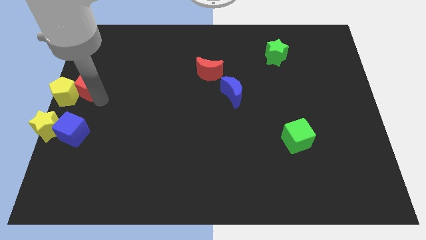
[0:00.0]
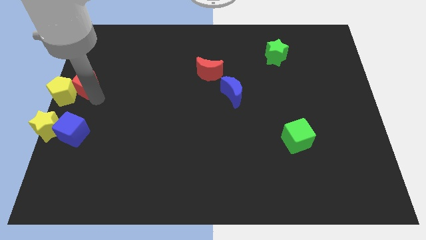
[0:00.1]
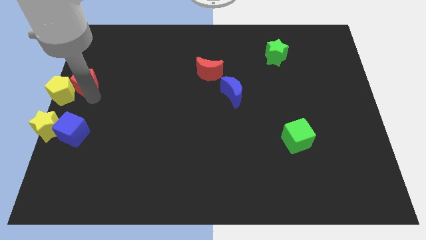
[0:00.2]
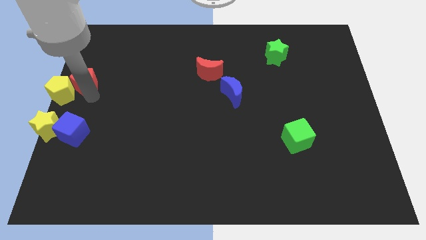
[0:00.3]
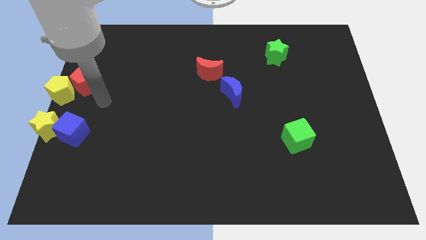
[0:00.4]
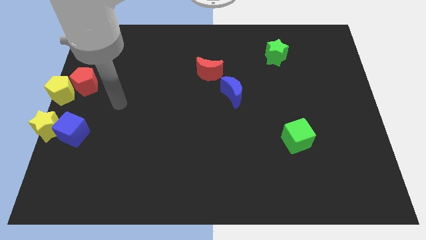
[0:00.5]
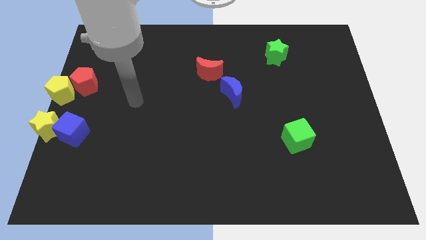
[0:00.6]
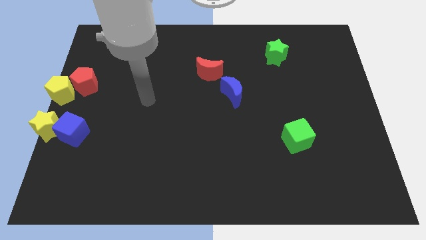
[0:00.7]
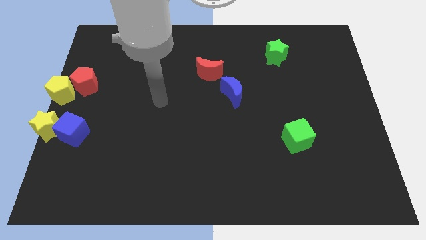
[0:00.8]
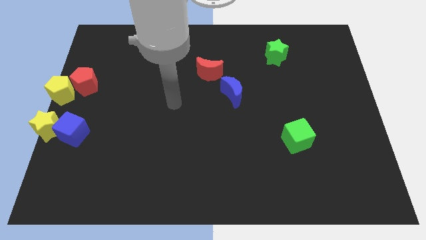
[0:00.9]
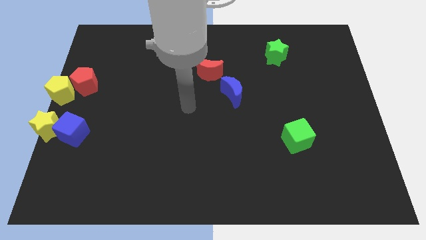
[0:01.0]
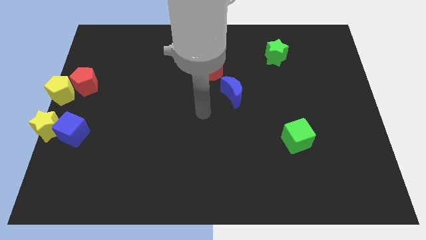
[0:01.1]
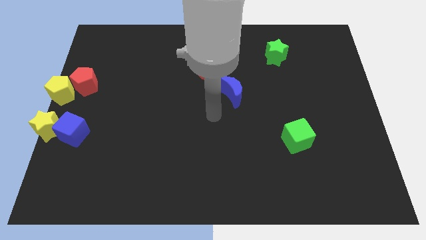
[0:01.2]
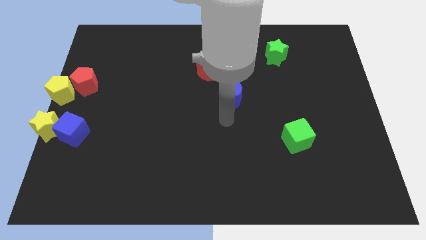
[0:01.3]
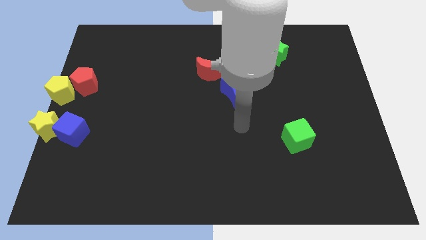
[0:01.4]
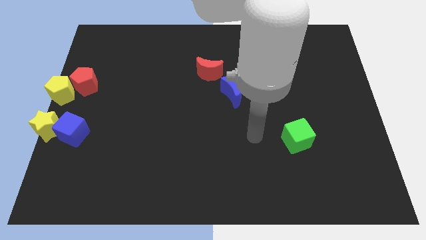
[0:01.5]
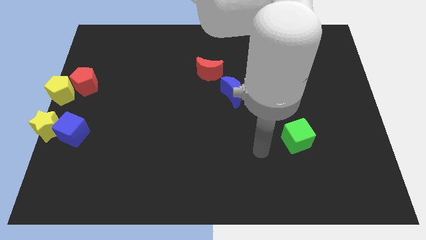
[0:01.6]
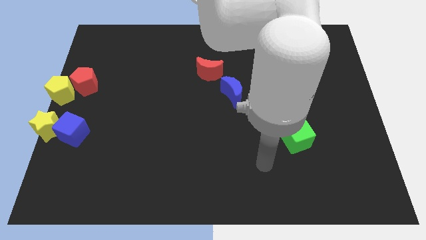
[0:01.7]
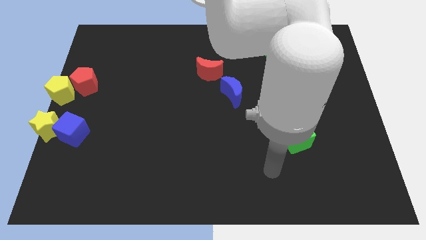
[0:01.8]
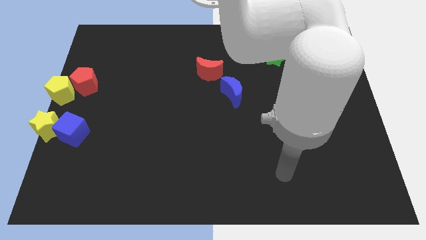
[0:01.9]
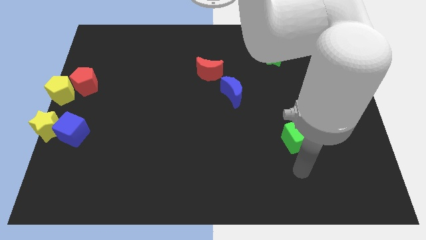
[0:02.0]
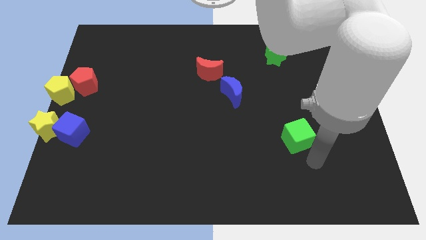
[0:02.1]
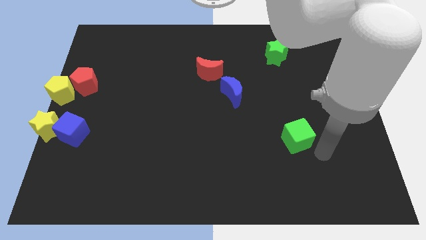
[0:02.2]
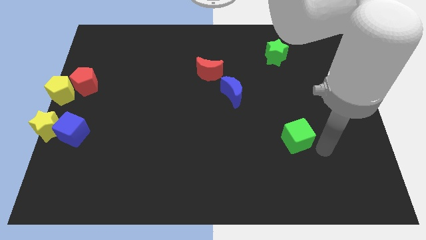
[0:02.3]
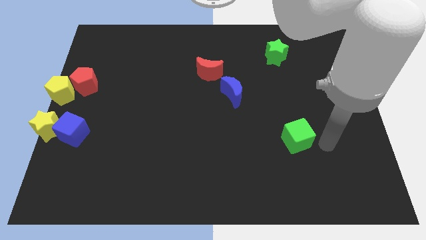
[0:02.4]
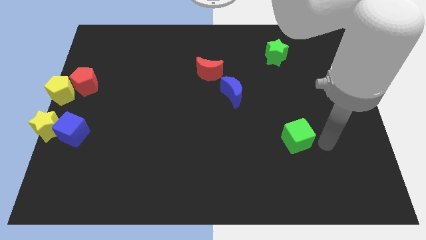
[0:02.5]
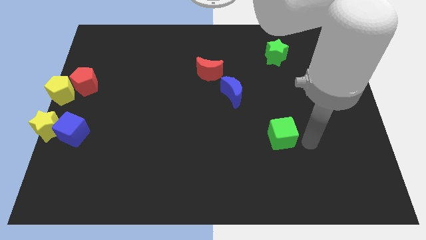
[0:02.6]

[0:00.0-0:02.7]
move your arm away from the red pentagon

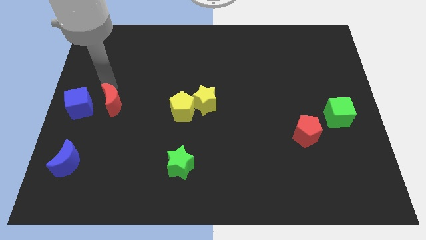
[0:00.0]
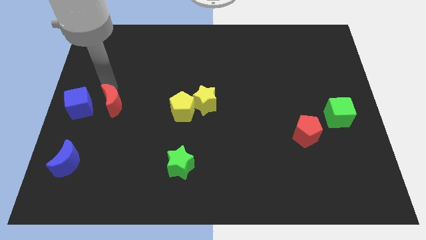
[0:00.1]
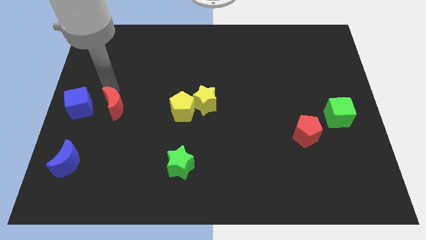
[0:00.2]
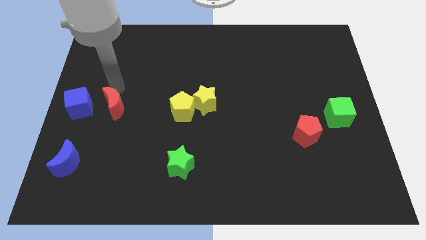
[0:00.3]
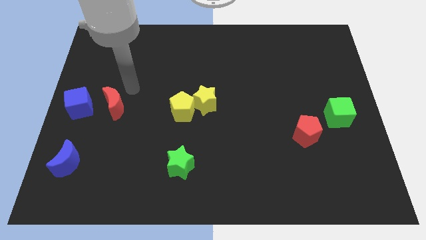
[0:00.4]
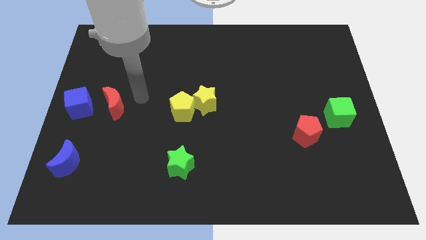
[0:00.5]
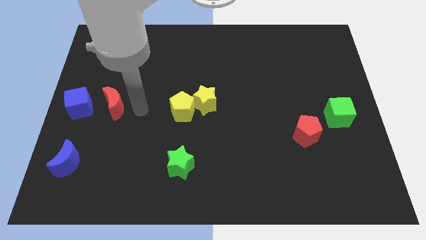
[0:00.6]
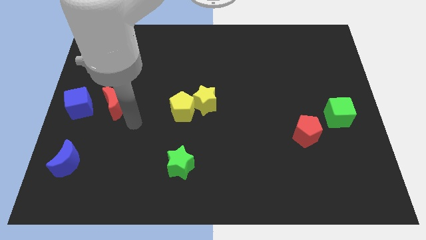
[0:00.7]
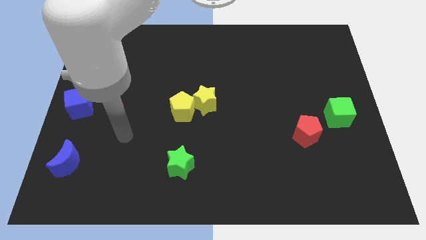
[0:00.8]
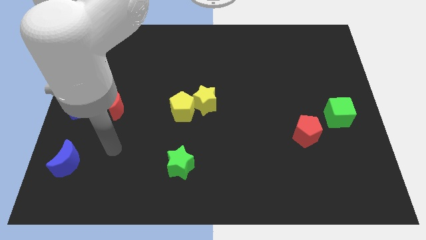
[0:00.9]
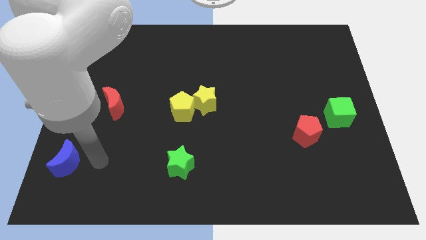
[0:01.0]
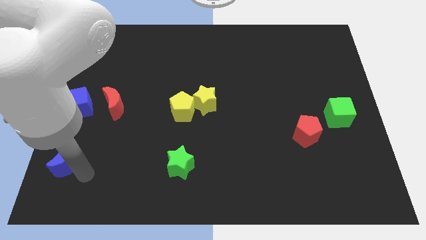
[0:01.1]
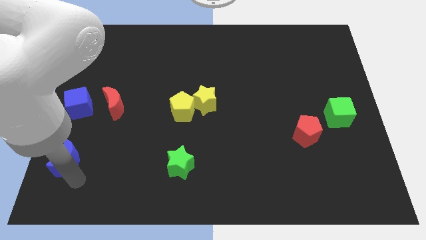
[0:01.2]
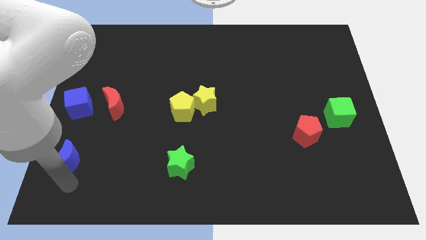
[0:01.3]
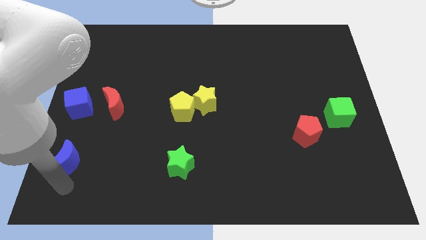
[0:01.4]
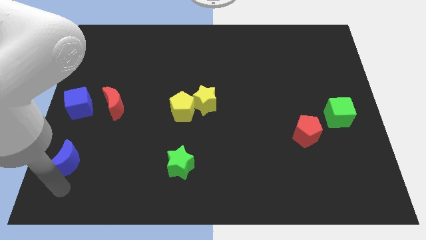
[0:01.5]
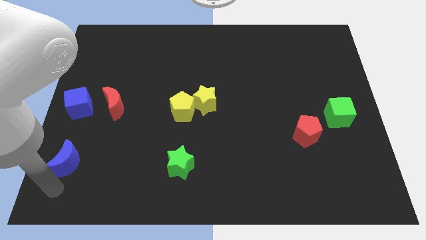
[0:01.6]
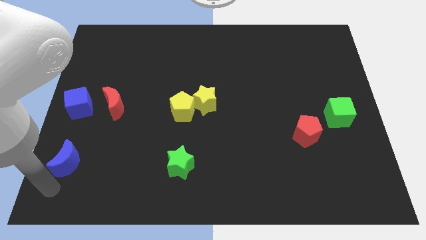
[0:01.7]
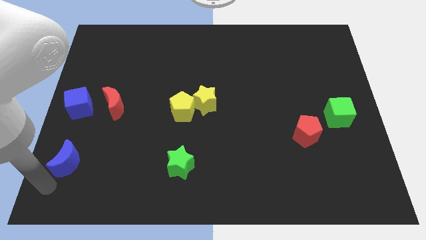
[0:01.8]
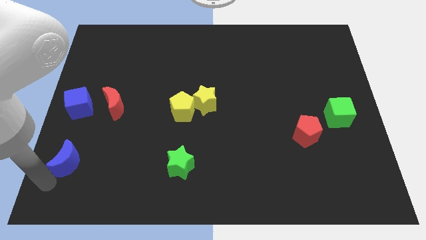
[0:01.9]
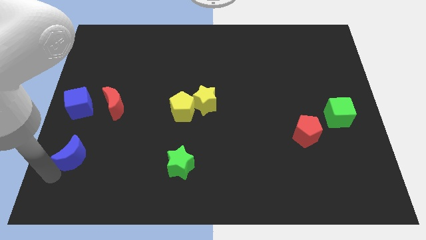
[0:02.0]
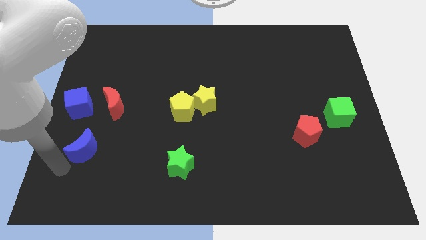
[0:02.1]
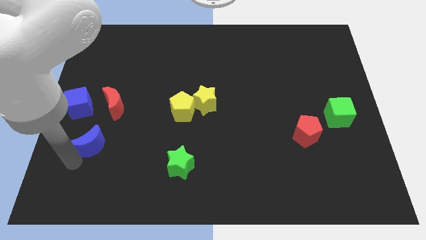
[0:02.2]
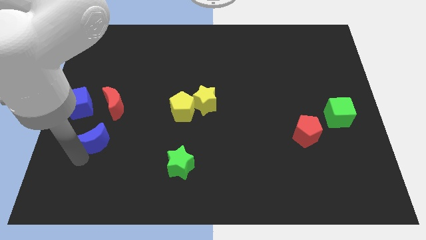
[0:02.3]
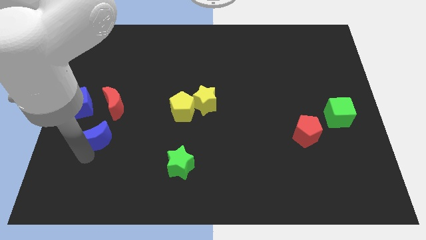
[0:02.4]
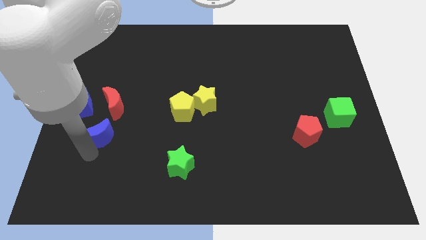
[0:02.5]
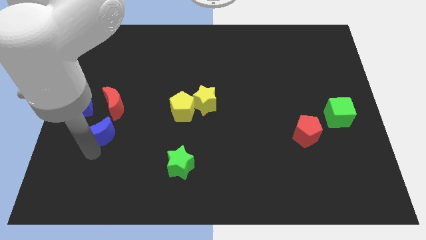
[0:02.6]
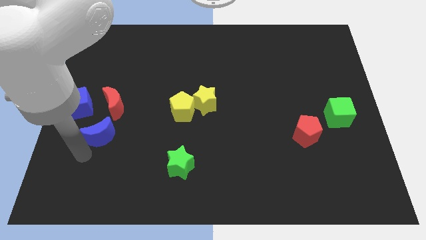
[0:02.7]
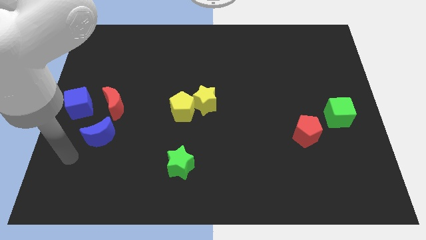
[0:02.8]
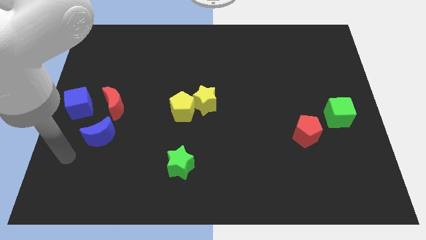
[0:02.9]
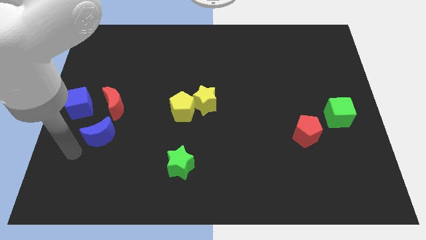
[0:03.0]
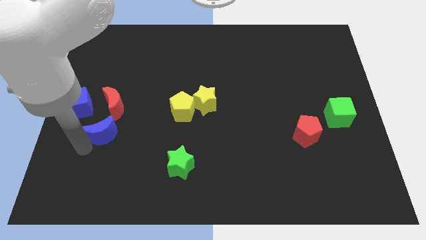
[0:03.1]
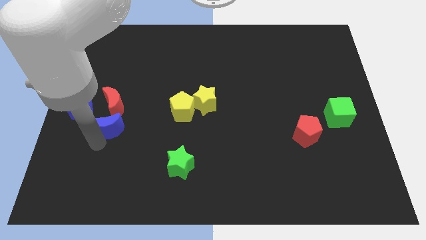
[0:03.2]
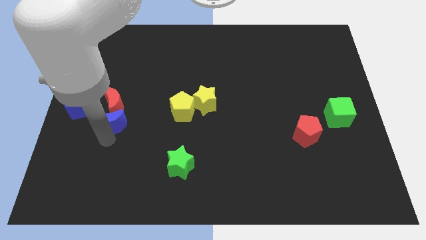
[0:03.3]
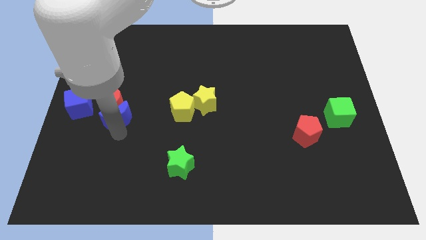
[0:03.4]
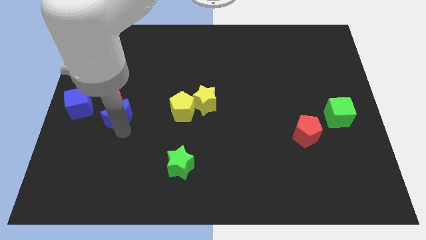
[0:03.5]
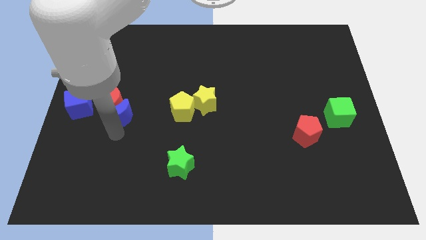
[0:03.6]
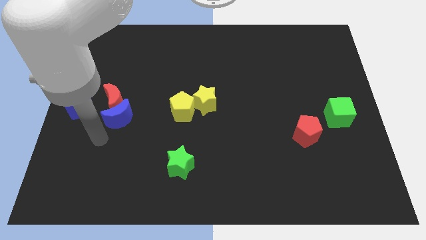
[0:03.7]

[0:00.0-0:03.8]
push the blue crescent into the bottom side of the red crescent

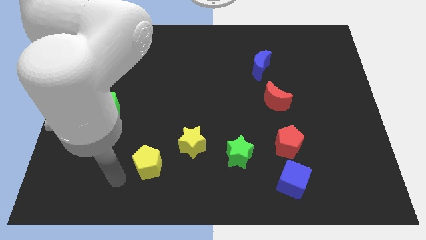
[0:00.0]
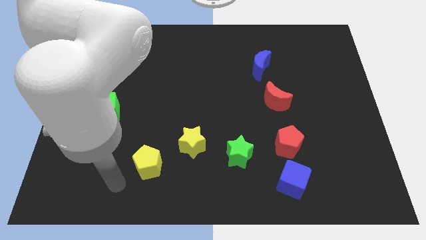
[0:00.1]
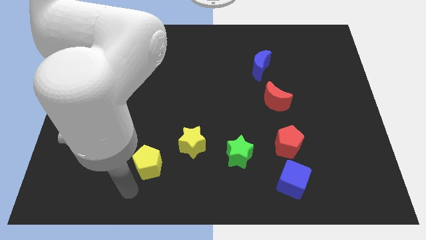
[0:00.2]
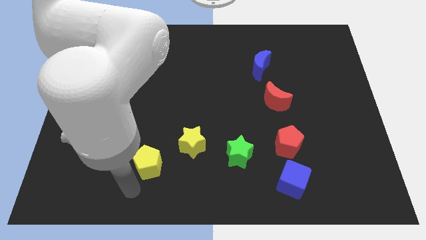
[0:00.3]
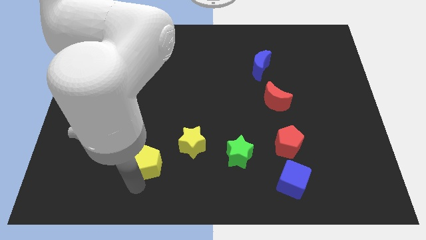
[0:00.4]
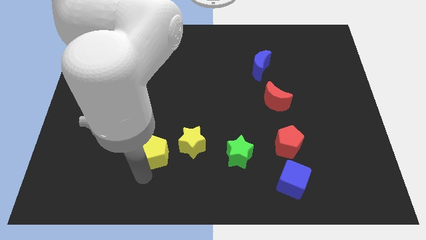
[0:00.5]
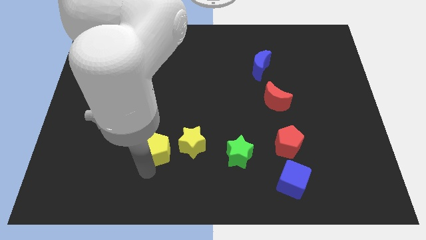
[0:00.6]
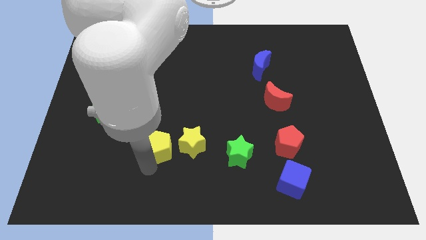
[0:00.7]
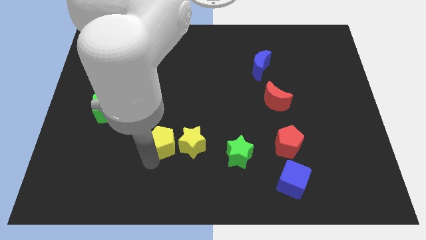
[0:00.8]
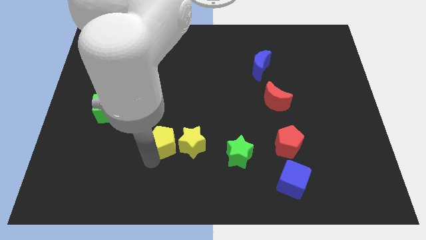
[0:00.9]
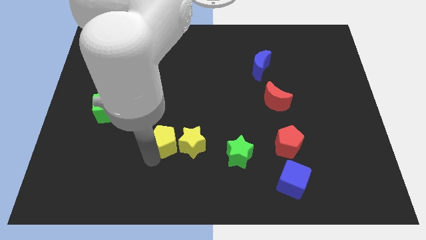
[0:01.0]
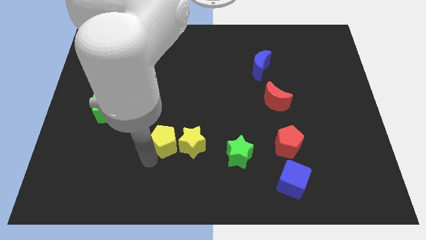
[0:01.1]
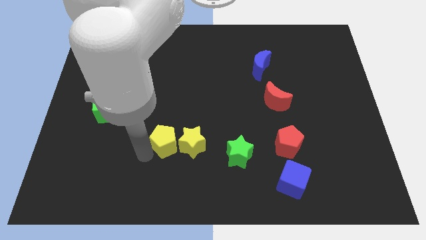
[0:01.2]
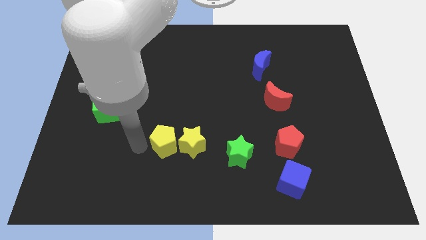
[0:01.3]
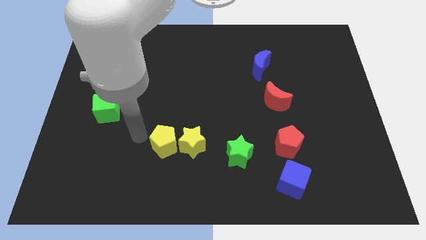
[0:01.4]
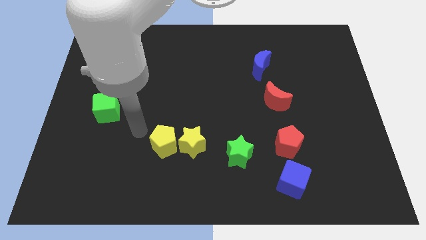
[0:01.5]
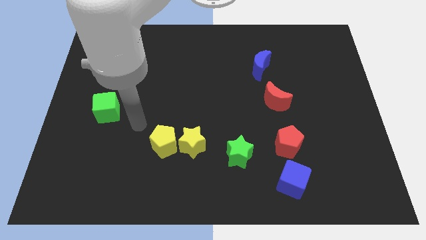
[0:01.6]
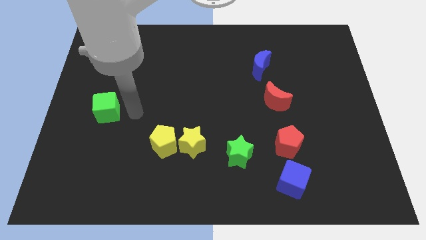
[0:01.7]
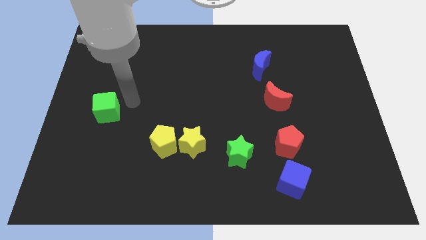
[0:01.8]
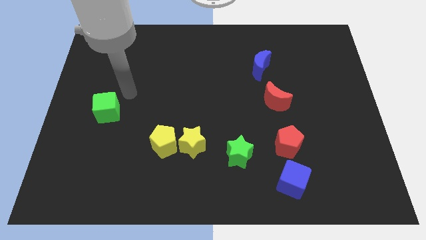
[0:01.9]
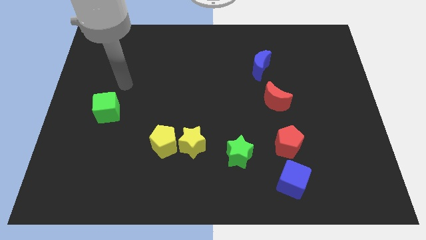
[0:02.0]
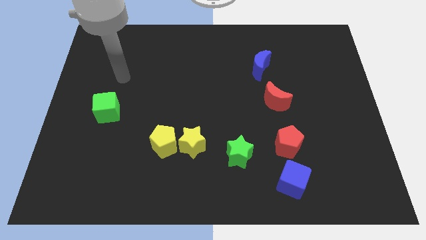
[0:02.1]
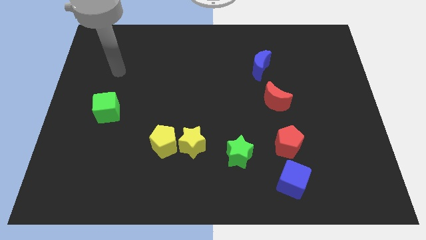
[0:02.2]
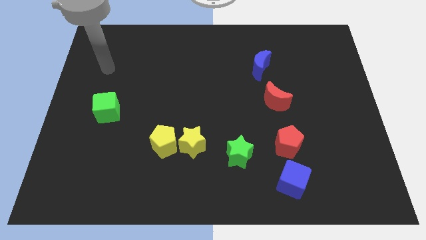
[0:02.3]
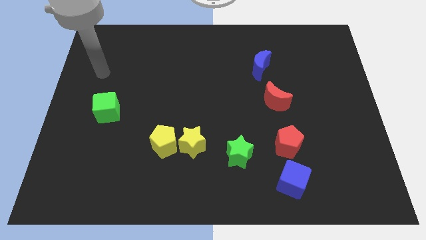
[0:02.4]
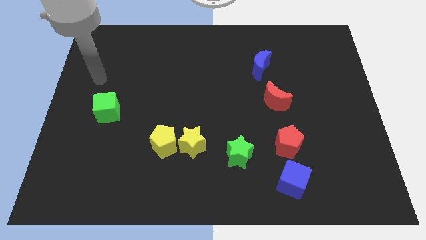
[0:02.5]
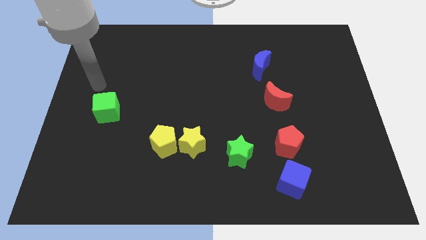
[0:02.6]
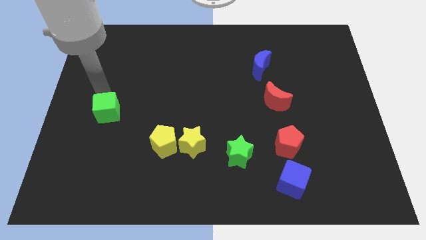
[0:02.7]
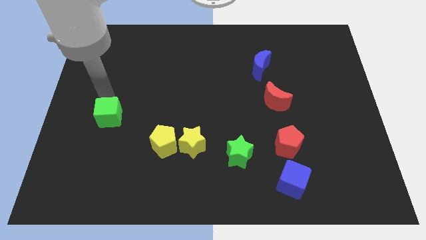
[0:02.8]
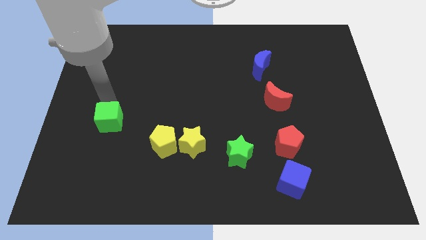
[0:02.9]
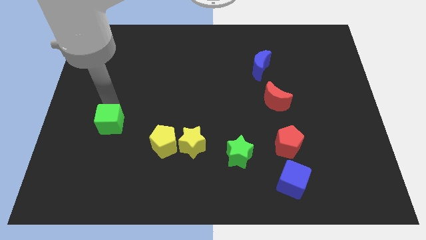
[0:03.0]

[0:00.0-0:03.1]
point your arm above green cube
